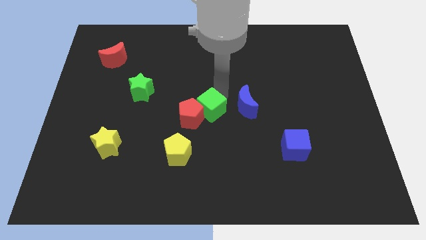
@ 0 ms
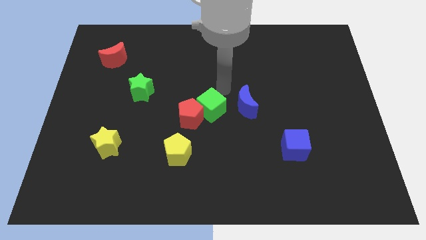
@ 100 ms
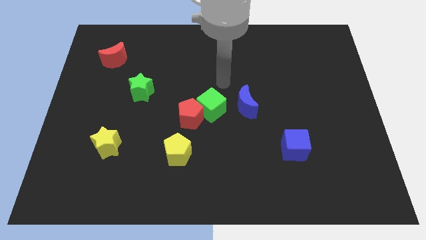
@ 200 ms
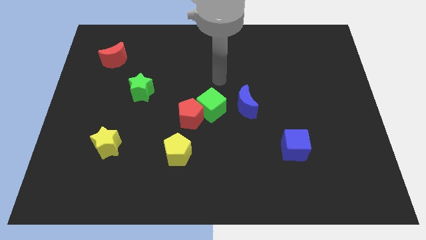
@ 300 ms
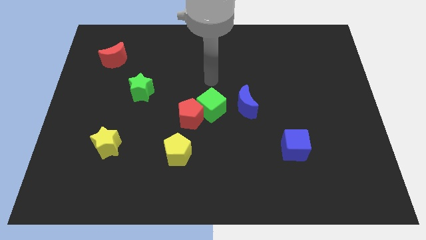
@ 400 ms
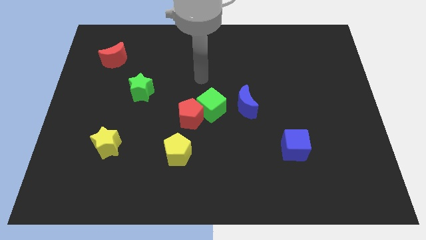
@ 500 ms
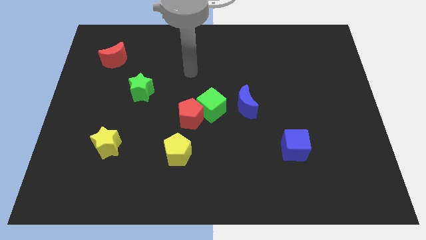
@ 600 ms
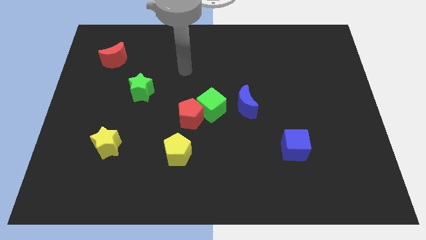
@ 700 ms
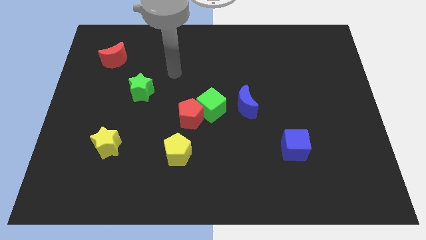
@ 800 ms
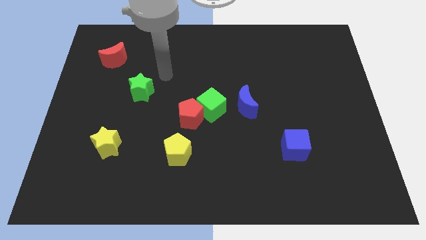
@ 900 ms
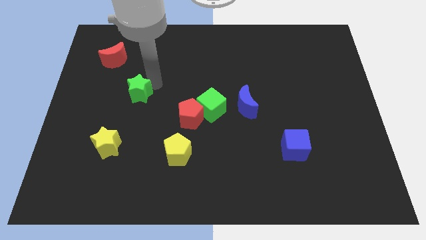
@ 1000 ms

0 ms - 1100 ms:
move your arm to the right of the green star

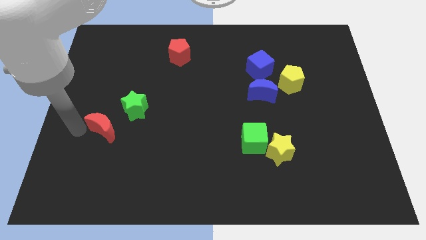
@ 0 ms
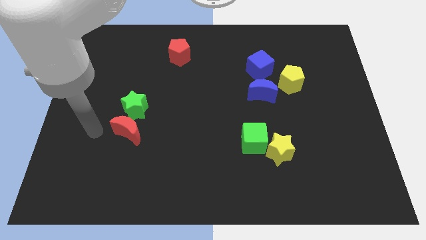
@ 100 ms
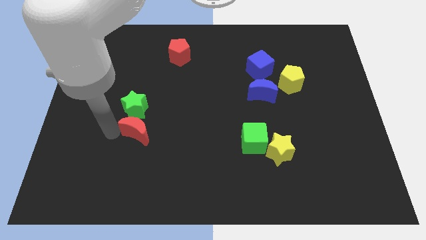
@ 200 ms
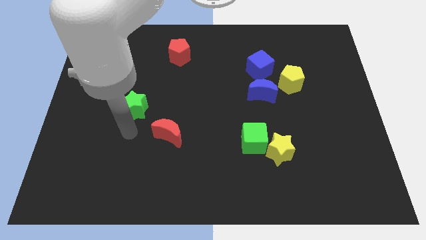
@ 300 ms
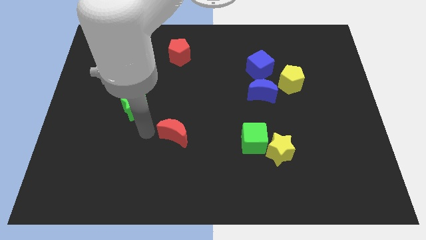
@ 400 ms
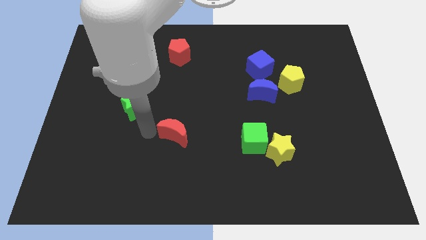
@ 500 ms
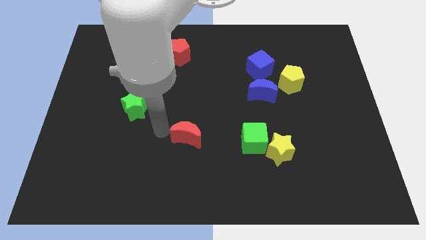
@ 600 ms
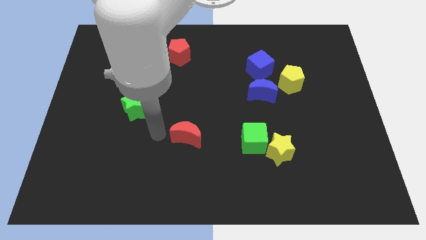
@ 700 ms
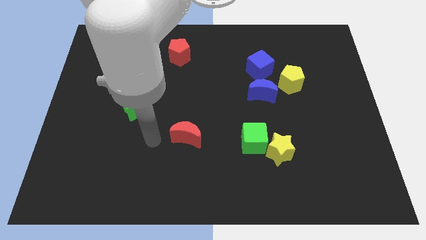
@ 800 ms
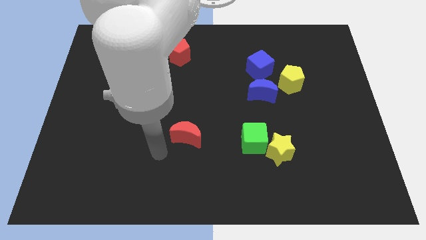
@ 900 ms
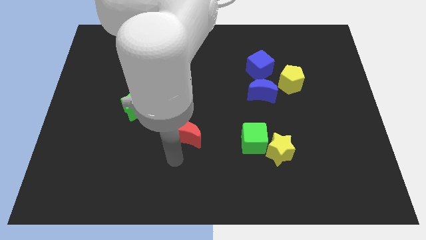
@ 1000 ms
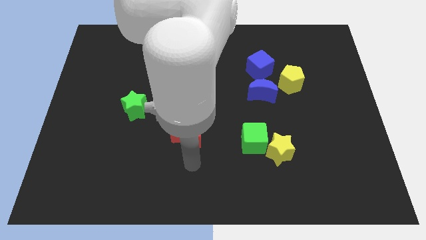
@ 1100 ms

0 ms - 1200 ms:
move the red crescent towards the green cube

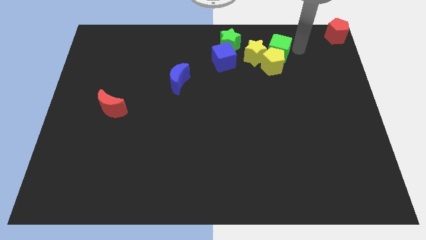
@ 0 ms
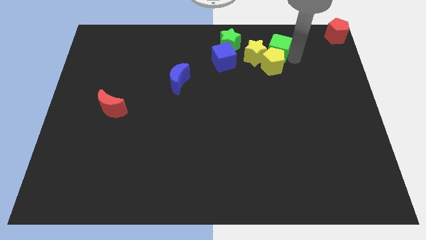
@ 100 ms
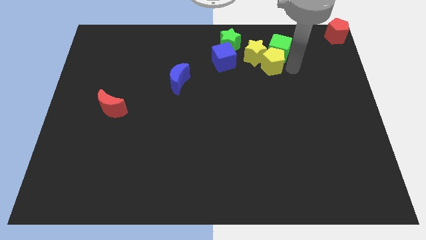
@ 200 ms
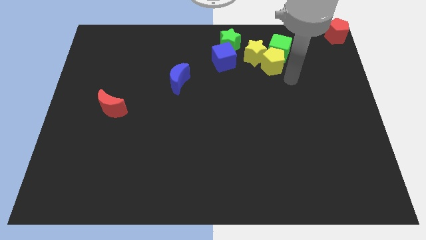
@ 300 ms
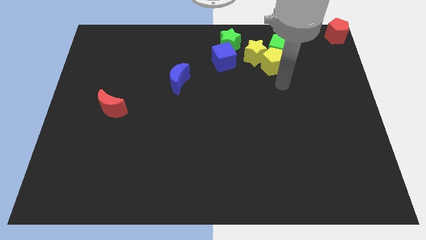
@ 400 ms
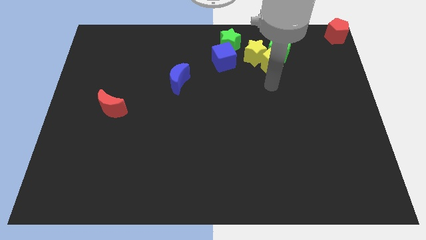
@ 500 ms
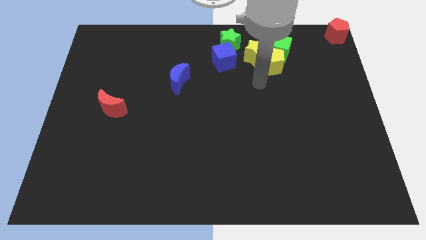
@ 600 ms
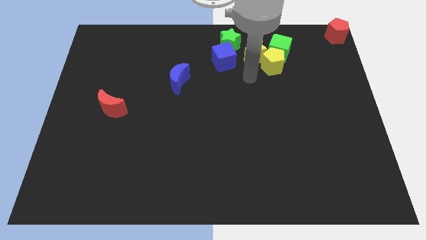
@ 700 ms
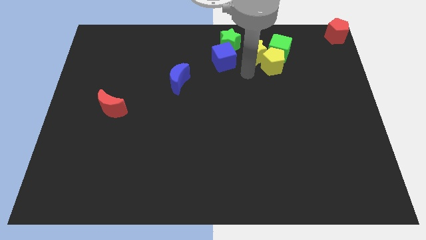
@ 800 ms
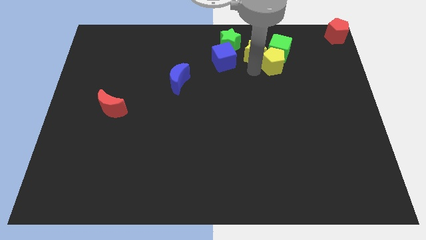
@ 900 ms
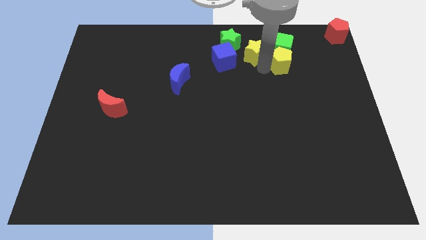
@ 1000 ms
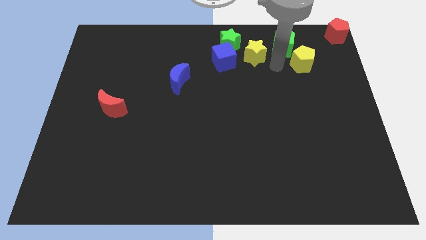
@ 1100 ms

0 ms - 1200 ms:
separate yellow pentagon from yellow star

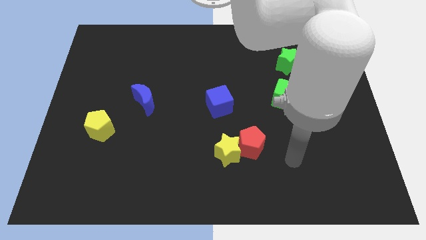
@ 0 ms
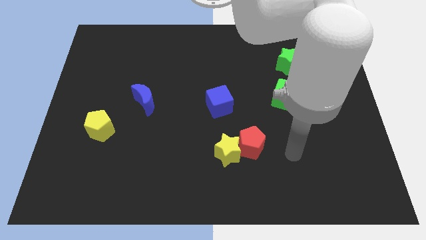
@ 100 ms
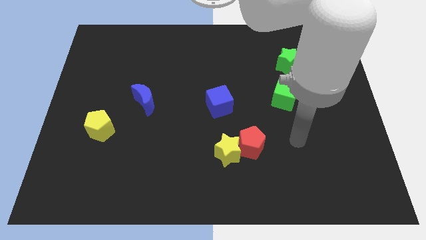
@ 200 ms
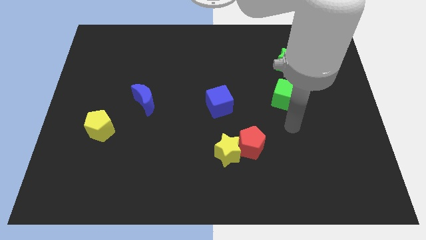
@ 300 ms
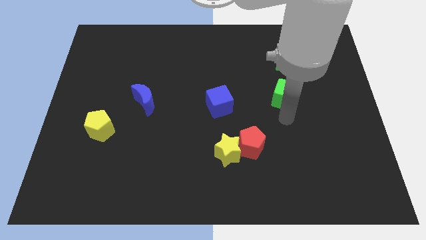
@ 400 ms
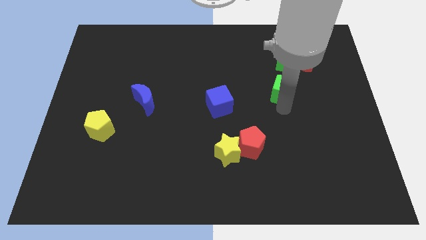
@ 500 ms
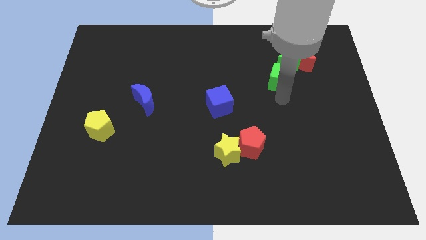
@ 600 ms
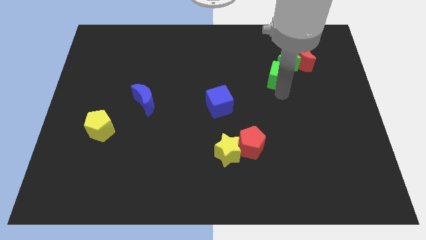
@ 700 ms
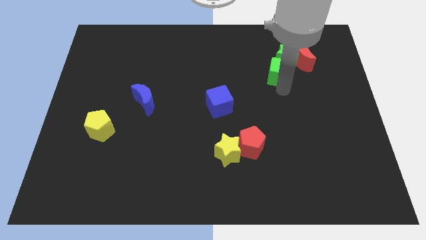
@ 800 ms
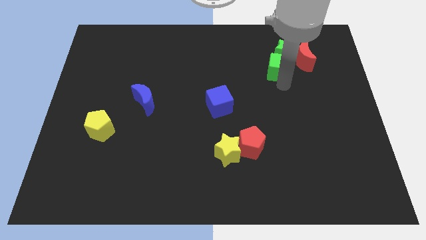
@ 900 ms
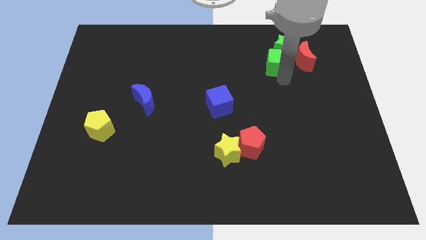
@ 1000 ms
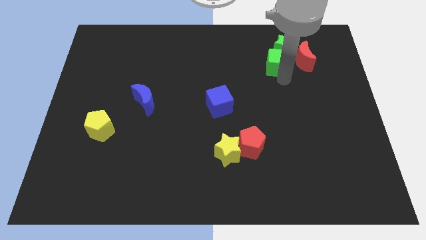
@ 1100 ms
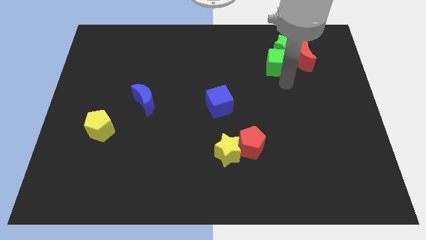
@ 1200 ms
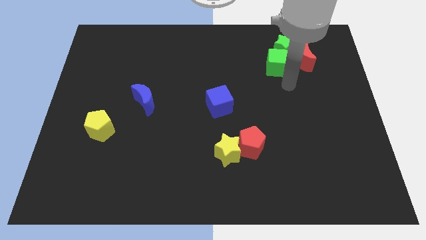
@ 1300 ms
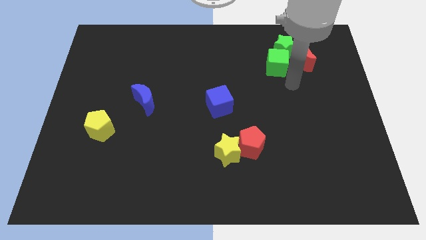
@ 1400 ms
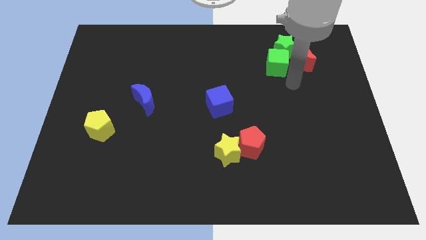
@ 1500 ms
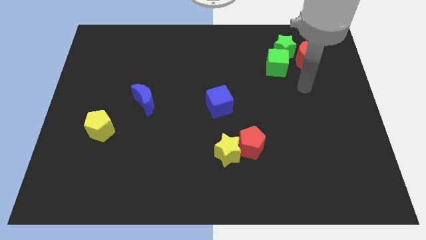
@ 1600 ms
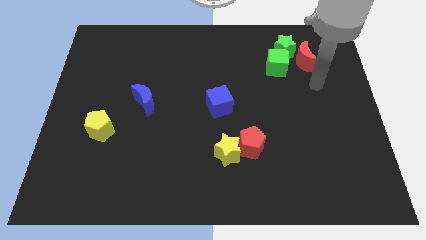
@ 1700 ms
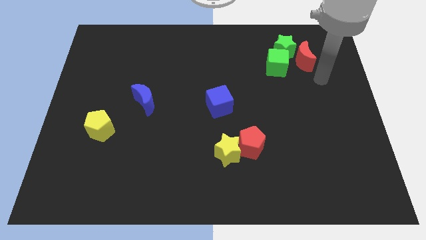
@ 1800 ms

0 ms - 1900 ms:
move the green cube towards the bottom side of the green star

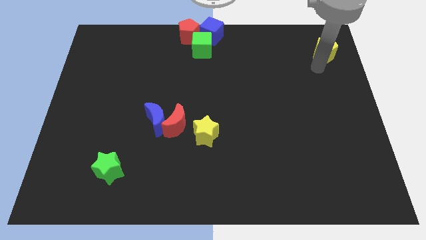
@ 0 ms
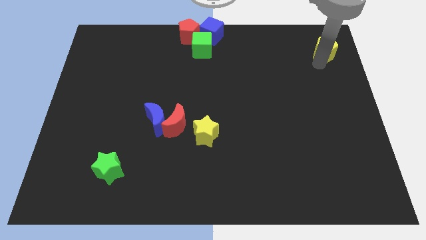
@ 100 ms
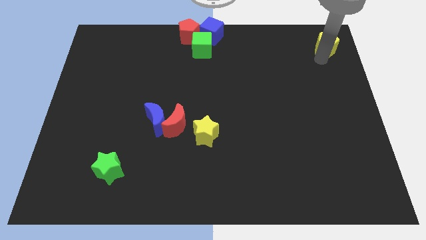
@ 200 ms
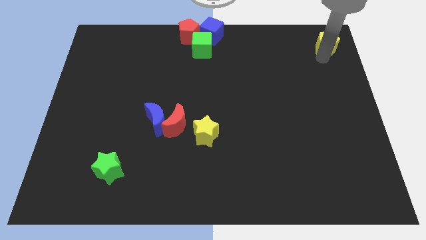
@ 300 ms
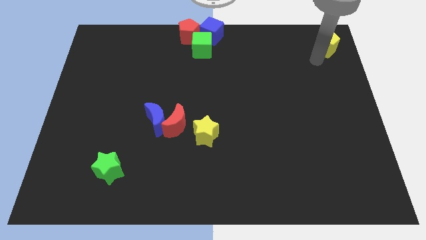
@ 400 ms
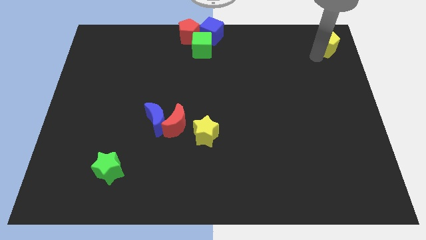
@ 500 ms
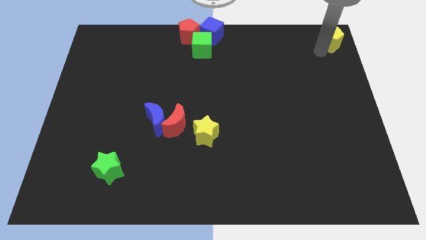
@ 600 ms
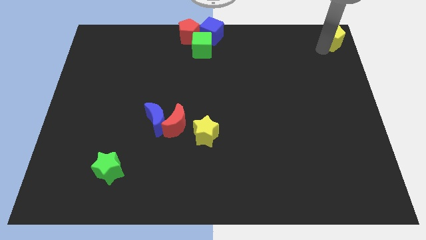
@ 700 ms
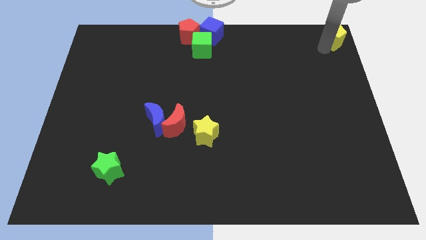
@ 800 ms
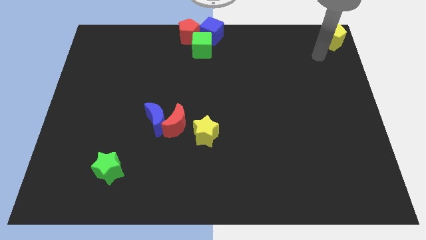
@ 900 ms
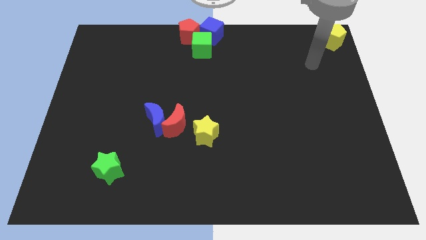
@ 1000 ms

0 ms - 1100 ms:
place yellow pentagon on top right corner

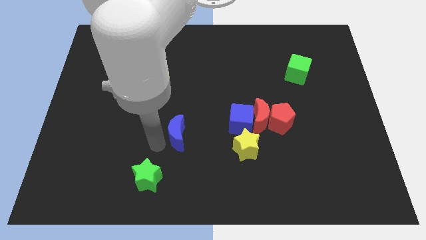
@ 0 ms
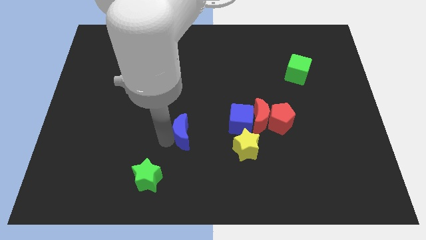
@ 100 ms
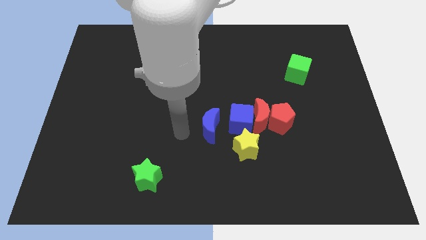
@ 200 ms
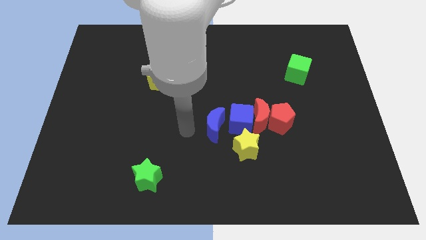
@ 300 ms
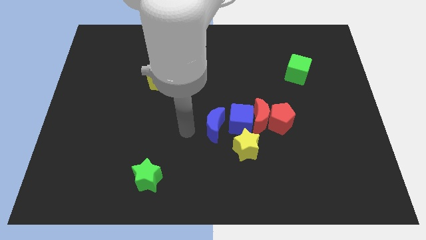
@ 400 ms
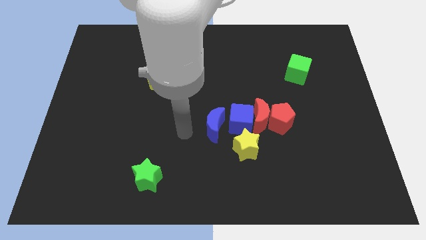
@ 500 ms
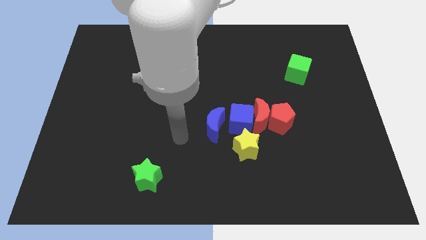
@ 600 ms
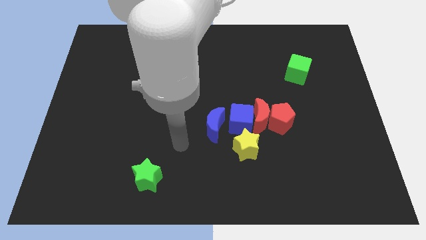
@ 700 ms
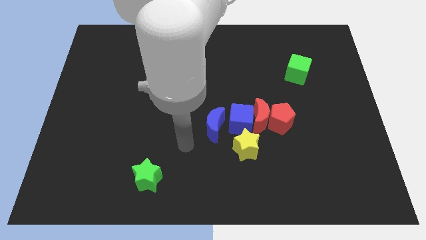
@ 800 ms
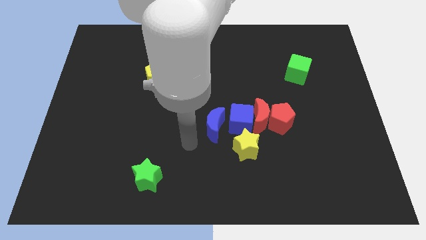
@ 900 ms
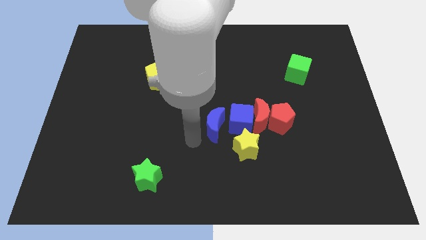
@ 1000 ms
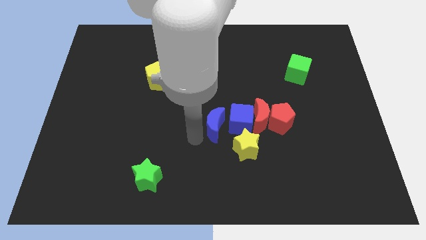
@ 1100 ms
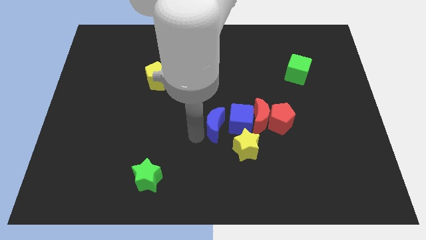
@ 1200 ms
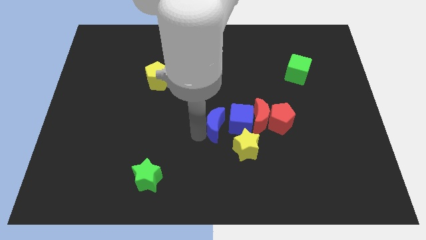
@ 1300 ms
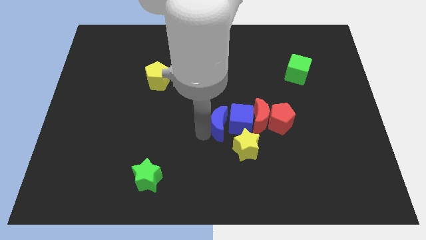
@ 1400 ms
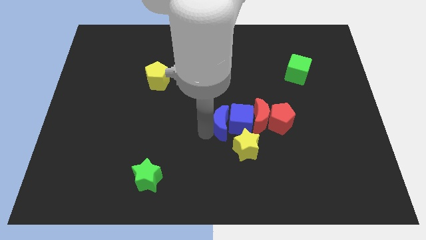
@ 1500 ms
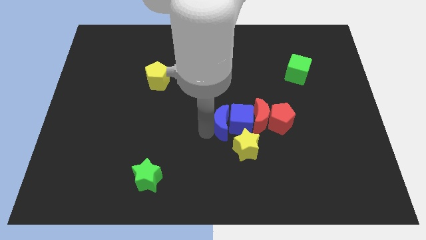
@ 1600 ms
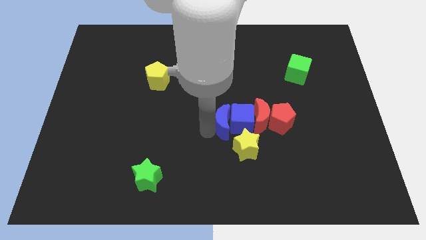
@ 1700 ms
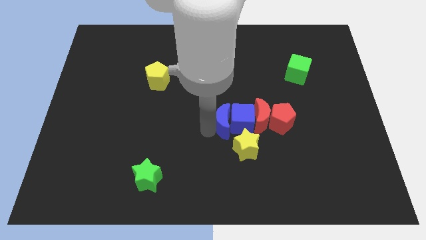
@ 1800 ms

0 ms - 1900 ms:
push the blue moon into the blue cube

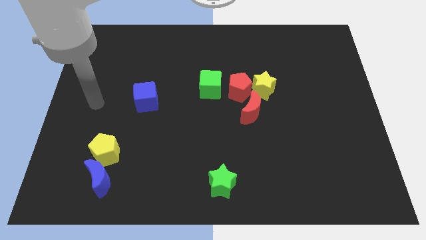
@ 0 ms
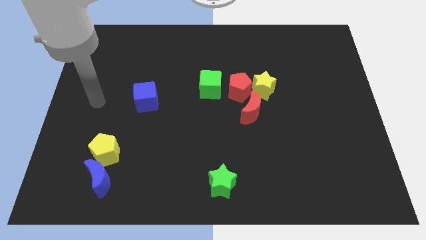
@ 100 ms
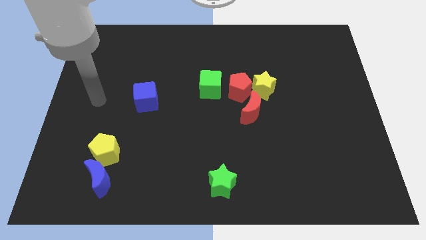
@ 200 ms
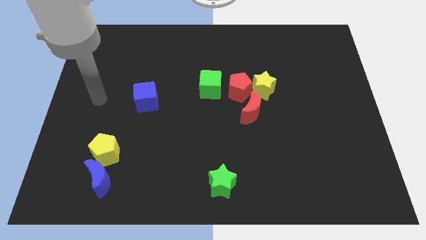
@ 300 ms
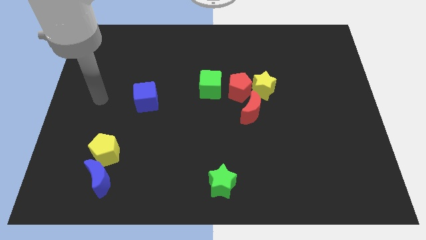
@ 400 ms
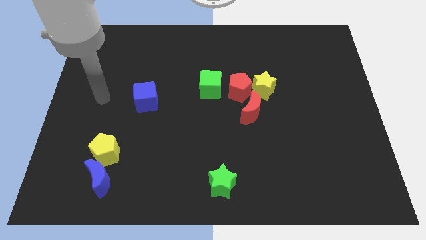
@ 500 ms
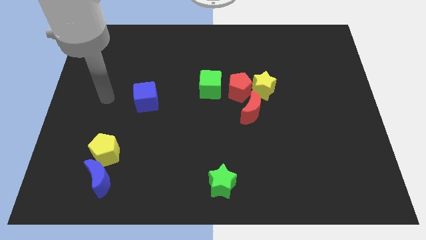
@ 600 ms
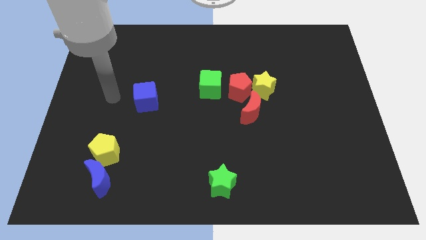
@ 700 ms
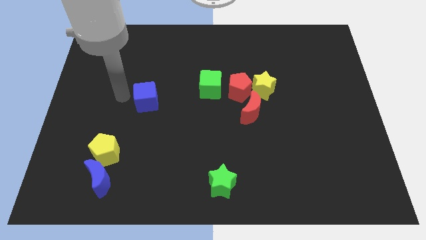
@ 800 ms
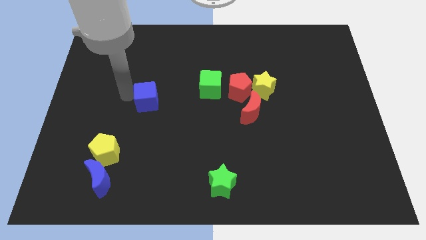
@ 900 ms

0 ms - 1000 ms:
touch the blue cube
